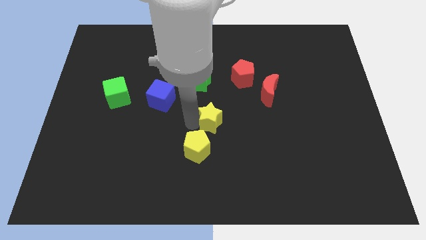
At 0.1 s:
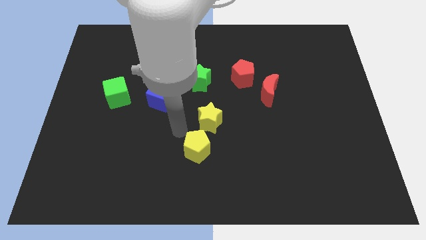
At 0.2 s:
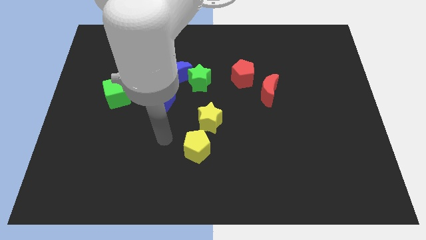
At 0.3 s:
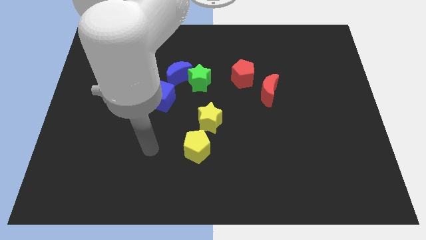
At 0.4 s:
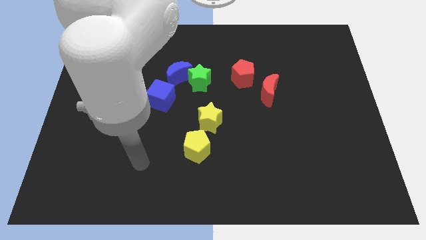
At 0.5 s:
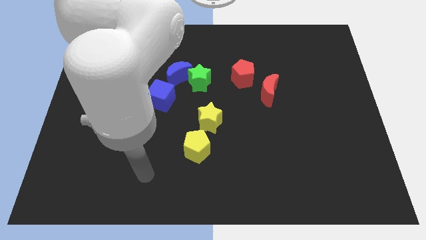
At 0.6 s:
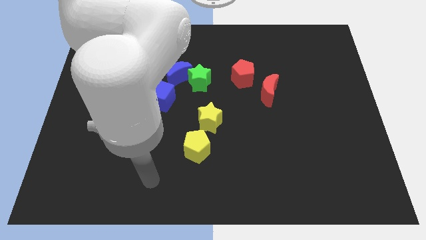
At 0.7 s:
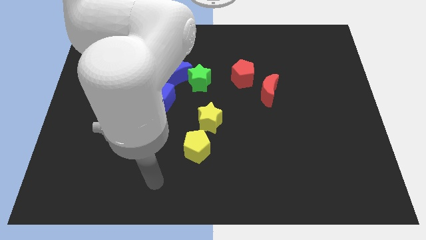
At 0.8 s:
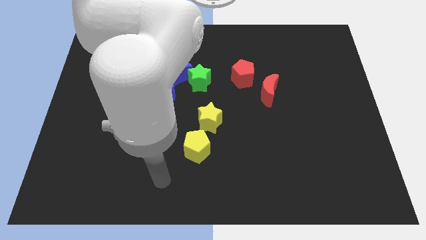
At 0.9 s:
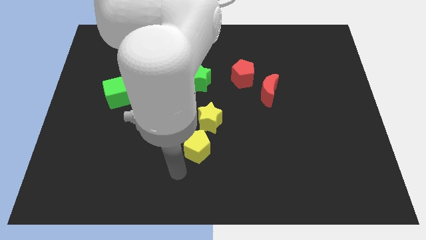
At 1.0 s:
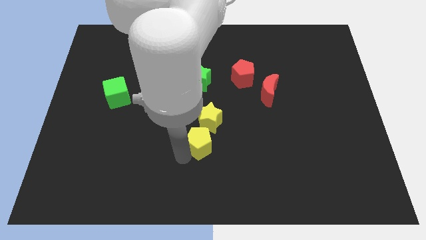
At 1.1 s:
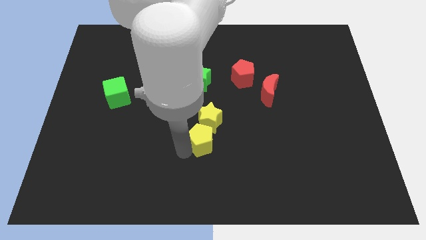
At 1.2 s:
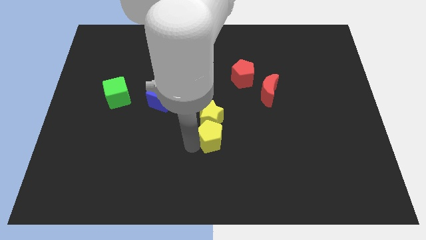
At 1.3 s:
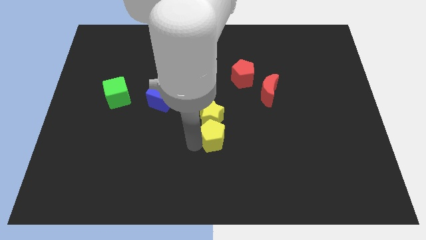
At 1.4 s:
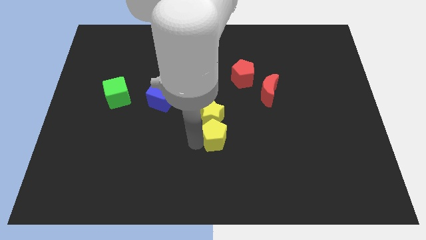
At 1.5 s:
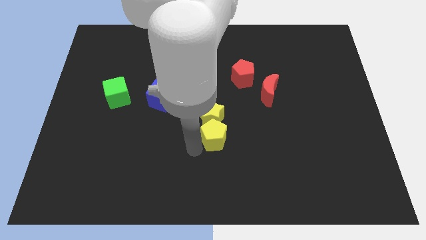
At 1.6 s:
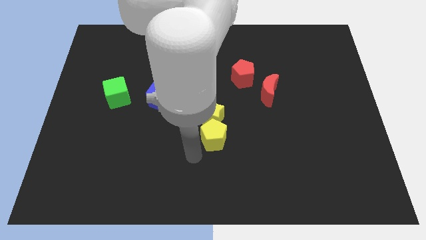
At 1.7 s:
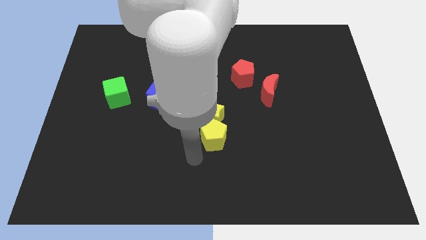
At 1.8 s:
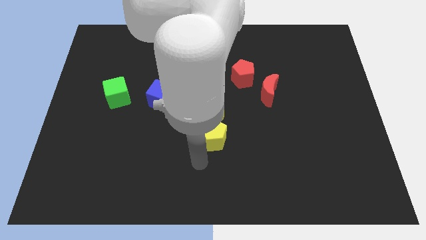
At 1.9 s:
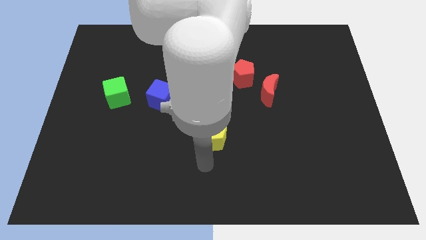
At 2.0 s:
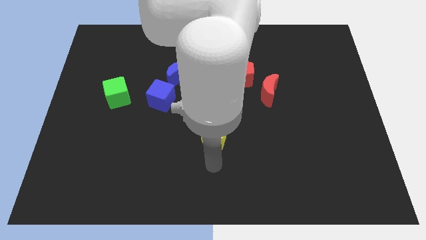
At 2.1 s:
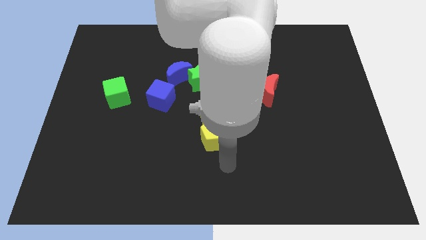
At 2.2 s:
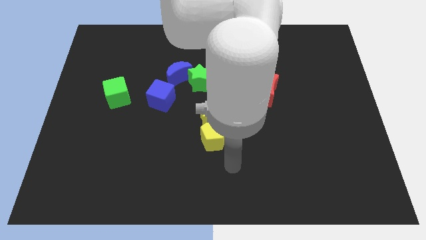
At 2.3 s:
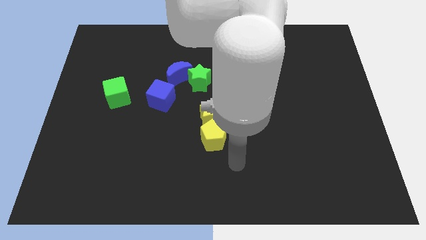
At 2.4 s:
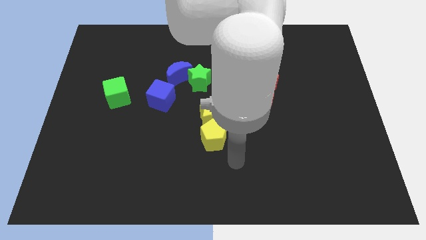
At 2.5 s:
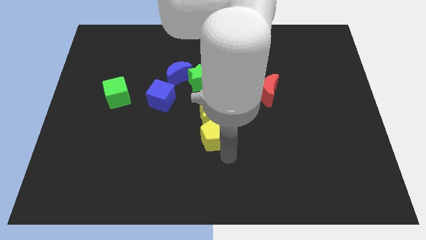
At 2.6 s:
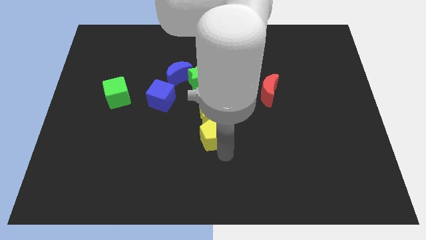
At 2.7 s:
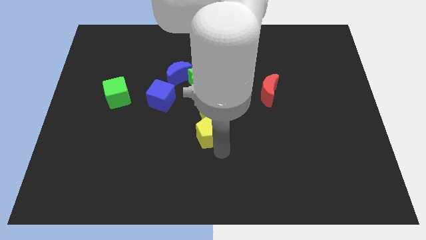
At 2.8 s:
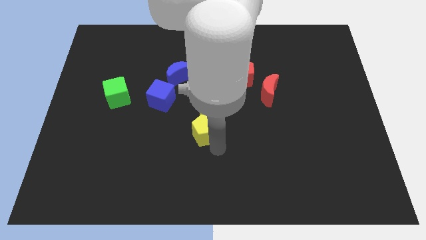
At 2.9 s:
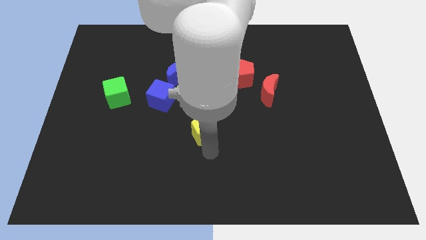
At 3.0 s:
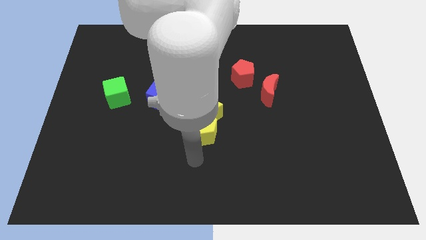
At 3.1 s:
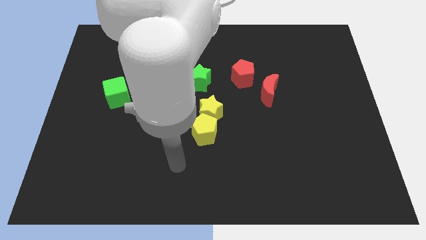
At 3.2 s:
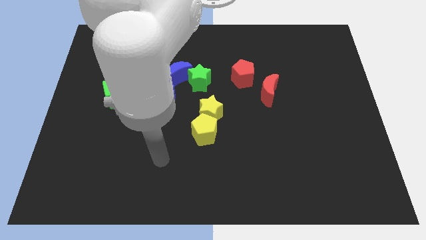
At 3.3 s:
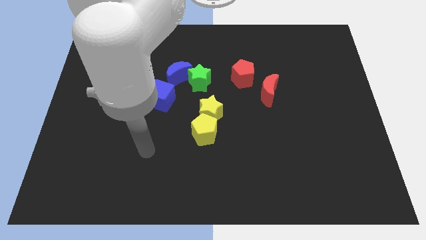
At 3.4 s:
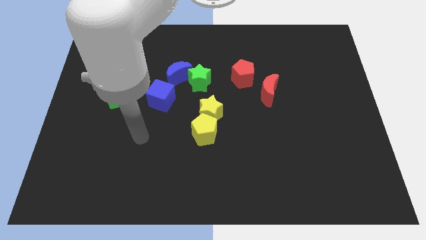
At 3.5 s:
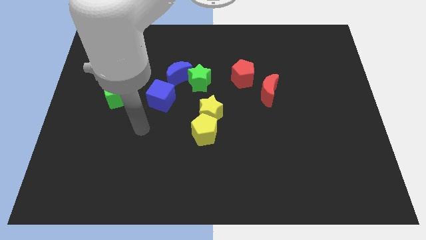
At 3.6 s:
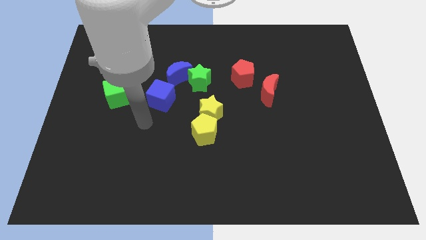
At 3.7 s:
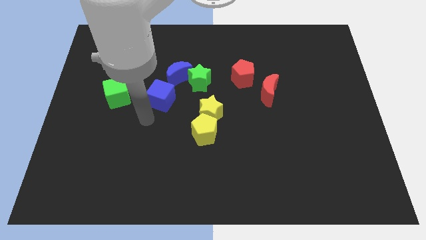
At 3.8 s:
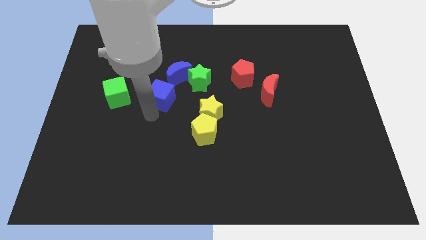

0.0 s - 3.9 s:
move the yellow star and the yellow pentagon towards the center of the board

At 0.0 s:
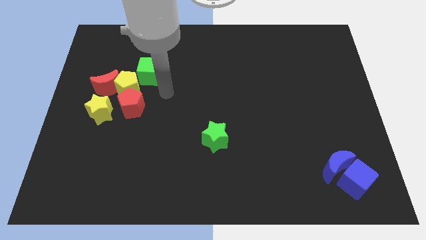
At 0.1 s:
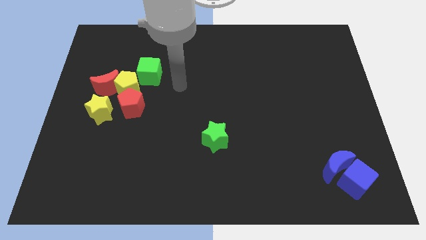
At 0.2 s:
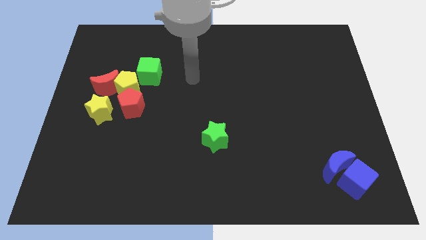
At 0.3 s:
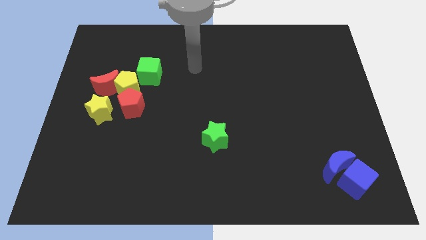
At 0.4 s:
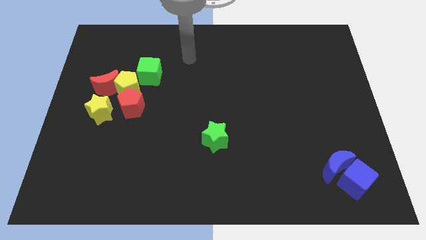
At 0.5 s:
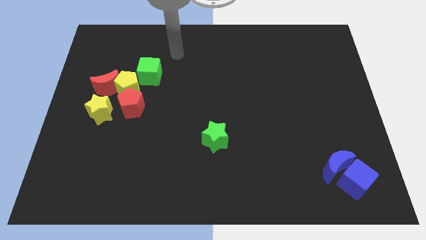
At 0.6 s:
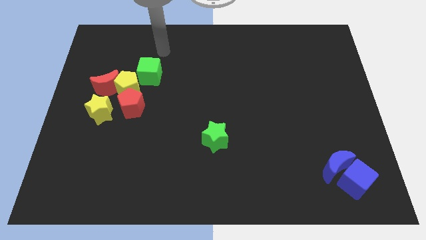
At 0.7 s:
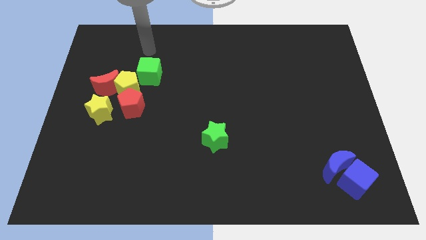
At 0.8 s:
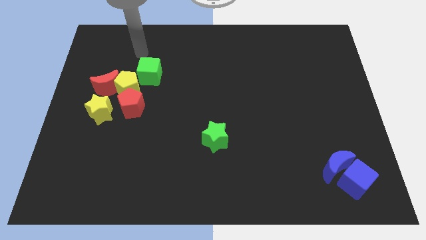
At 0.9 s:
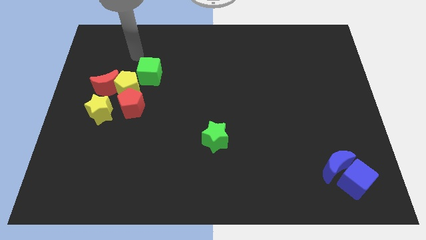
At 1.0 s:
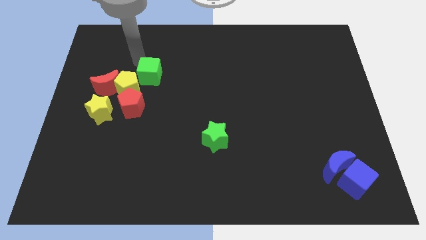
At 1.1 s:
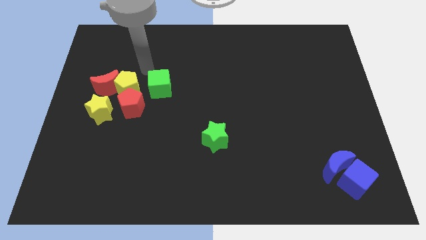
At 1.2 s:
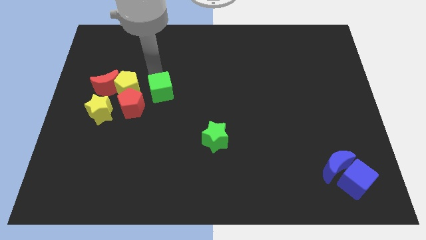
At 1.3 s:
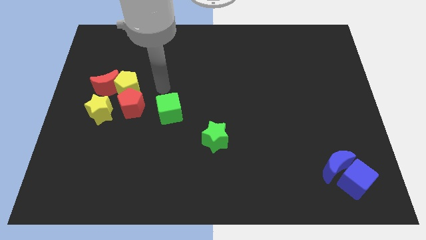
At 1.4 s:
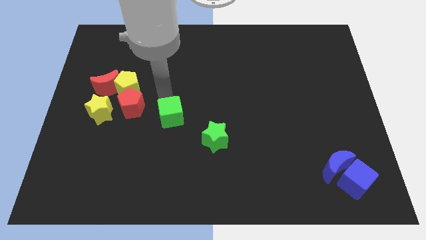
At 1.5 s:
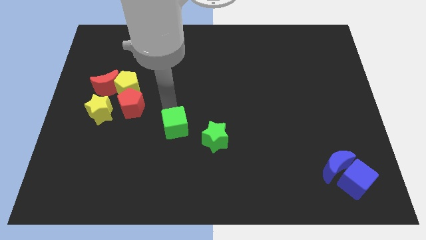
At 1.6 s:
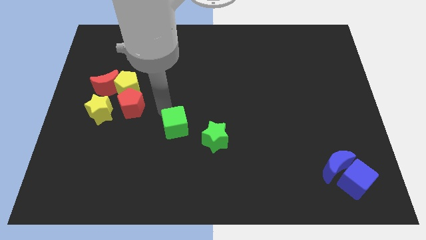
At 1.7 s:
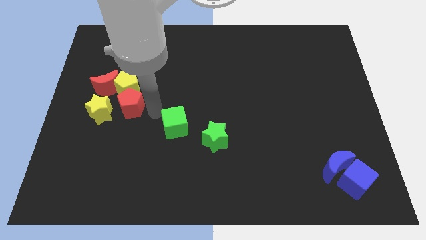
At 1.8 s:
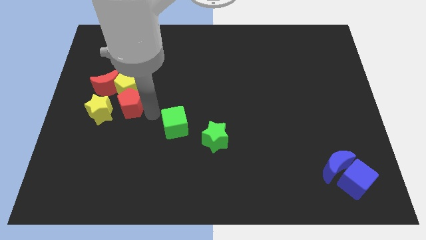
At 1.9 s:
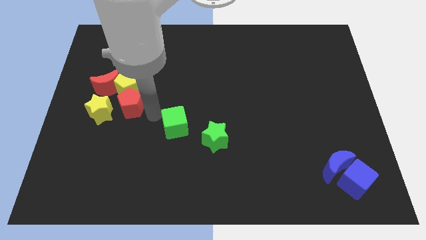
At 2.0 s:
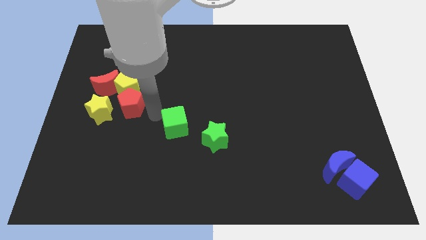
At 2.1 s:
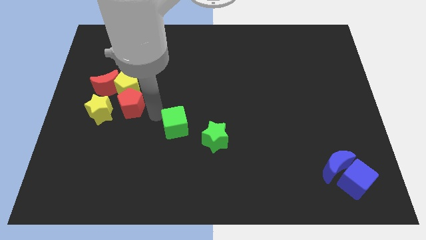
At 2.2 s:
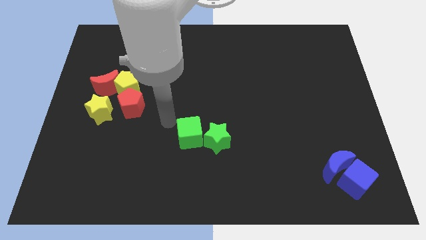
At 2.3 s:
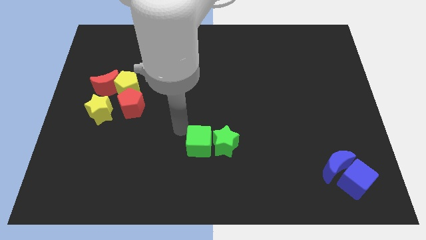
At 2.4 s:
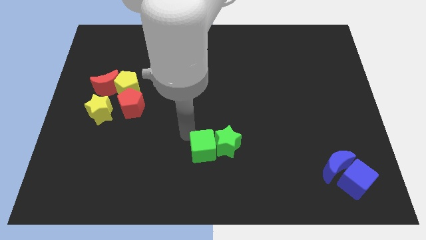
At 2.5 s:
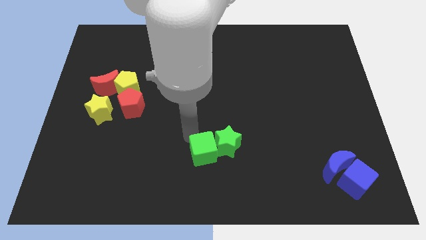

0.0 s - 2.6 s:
push green cube to the center of the board

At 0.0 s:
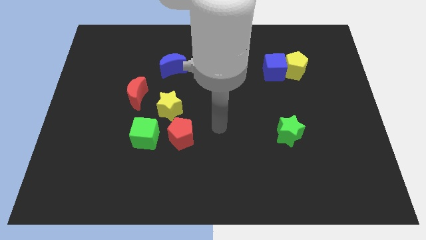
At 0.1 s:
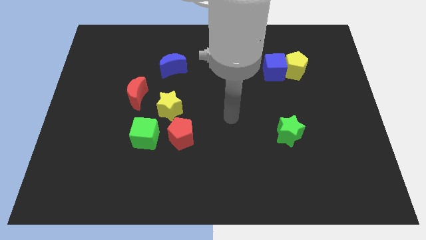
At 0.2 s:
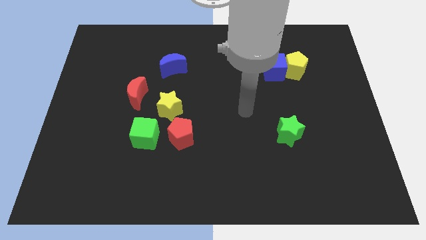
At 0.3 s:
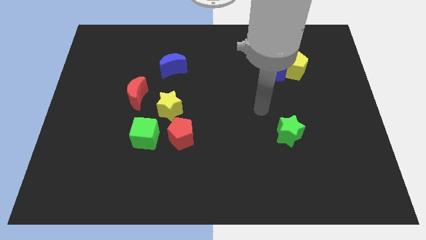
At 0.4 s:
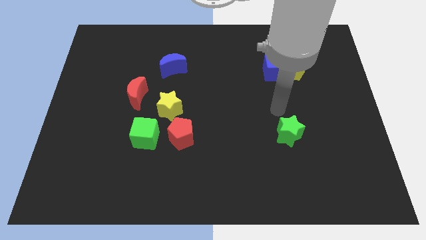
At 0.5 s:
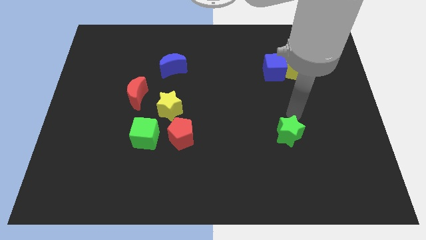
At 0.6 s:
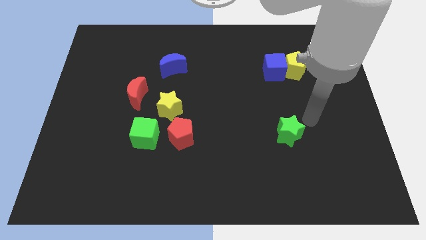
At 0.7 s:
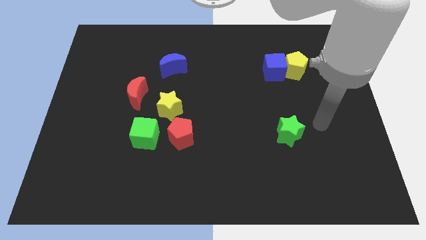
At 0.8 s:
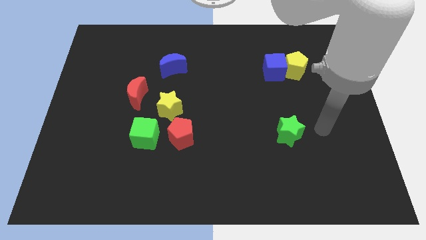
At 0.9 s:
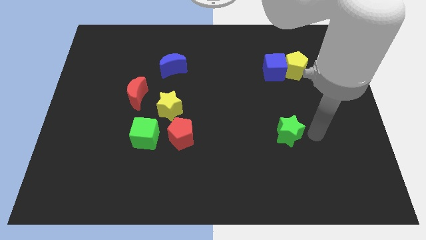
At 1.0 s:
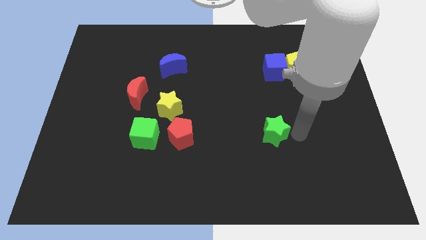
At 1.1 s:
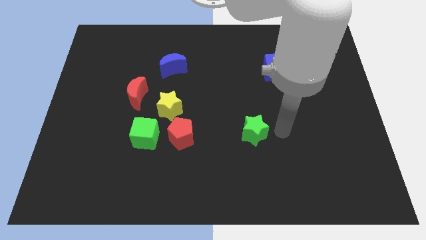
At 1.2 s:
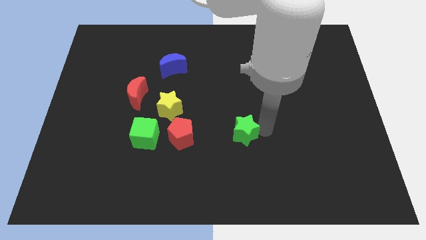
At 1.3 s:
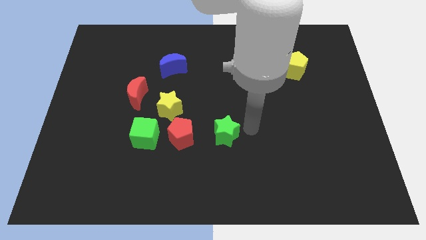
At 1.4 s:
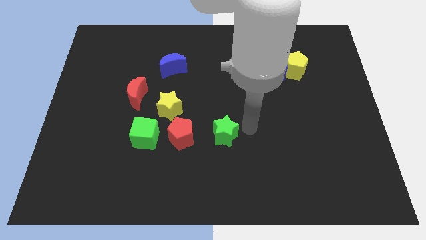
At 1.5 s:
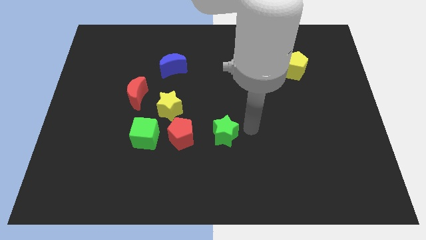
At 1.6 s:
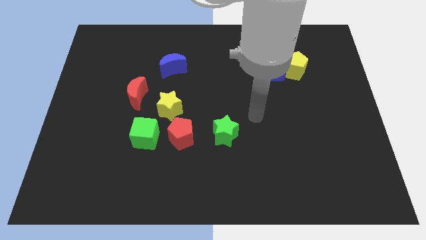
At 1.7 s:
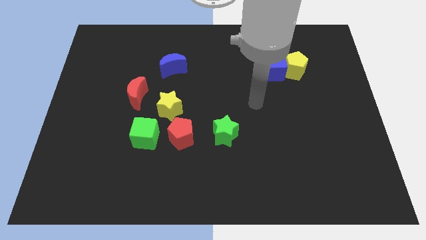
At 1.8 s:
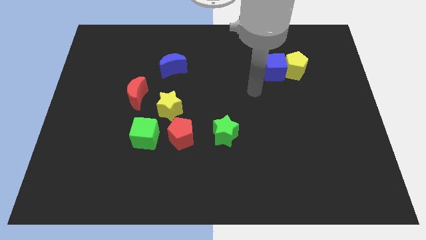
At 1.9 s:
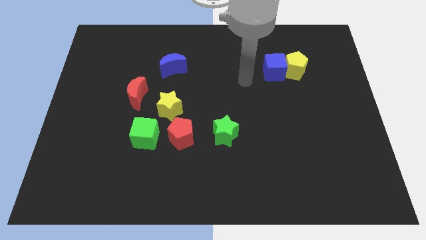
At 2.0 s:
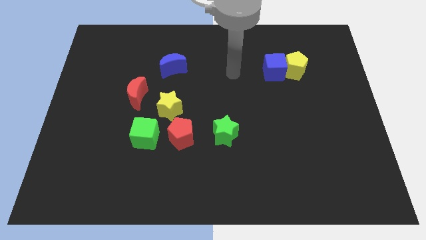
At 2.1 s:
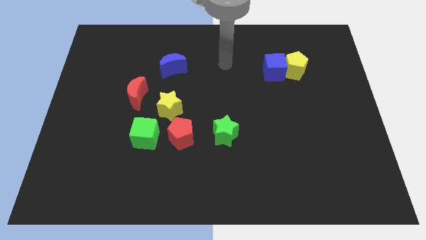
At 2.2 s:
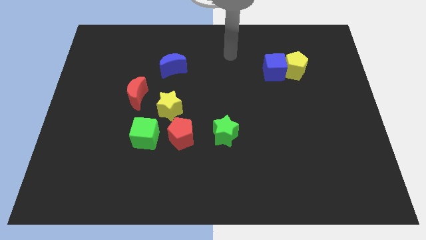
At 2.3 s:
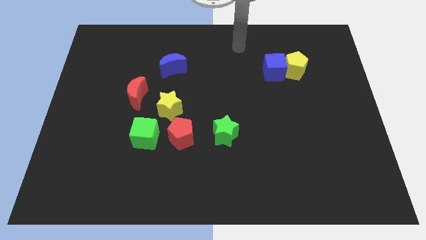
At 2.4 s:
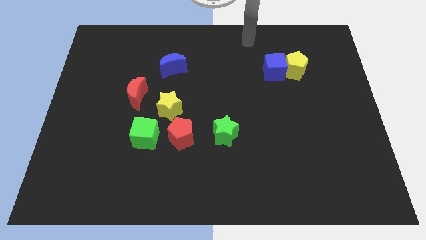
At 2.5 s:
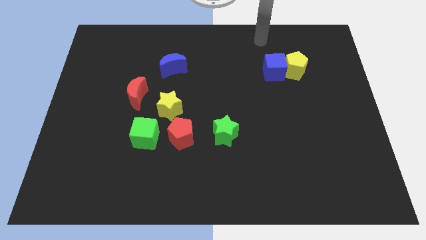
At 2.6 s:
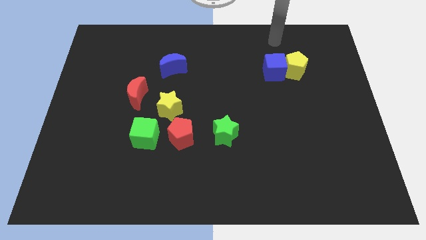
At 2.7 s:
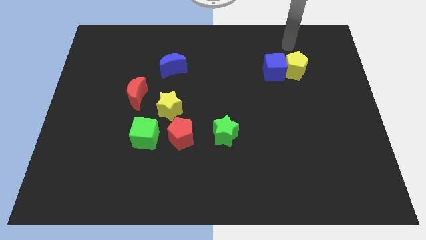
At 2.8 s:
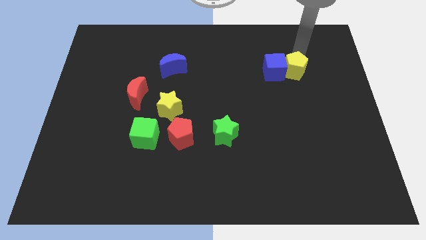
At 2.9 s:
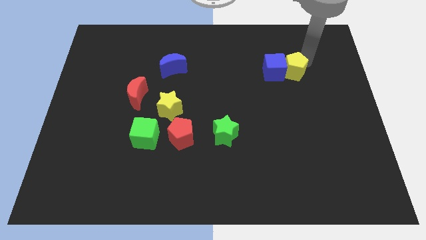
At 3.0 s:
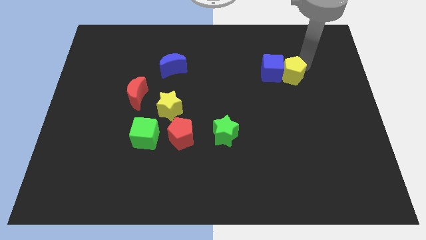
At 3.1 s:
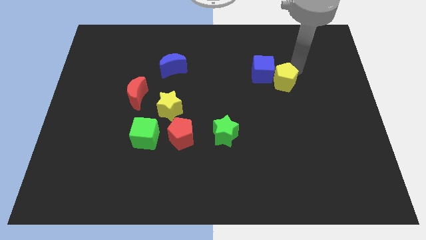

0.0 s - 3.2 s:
place the green star to the right side of the red pentagon
